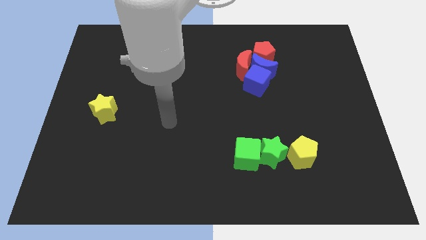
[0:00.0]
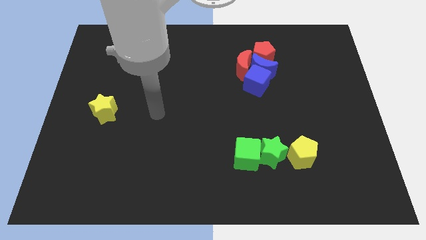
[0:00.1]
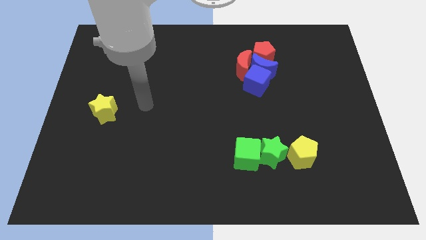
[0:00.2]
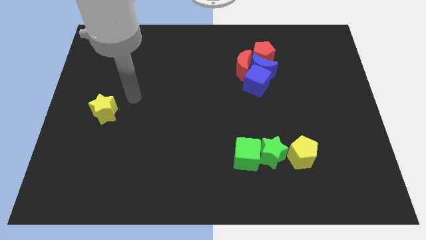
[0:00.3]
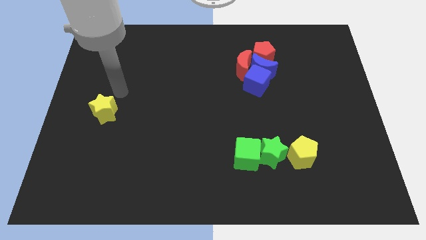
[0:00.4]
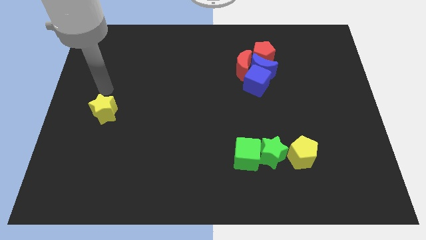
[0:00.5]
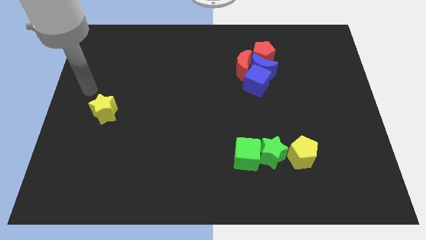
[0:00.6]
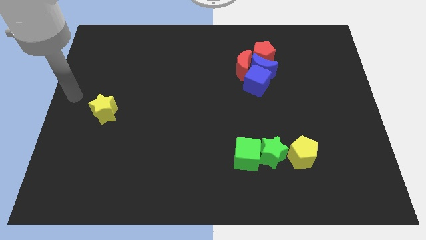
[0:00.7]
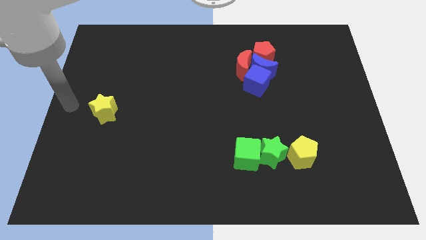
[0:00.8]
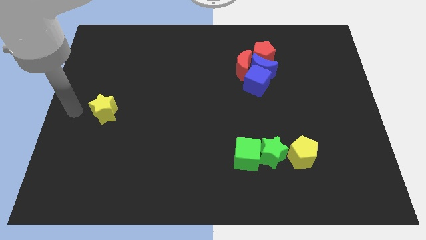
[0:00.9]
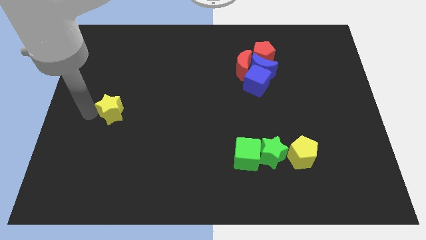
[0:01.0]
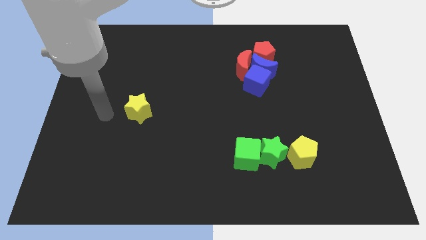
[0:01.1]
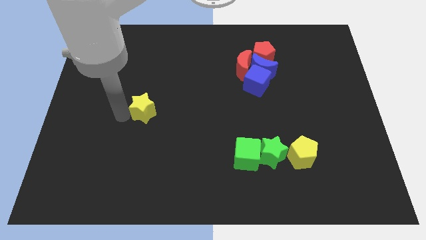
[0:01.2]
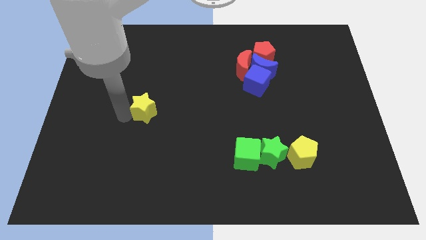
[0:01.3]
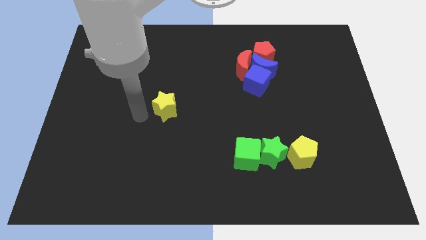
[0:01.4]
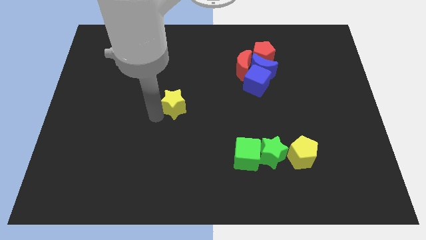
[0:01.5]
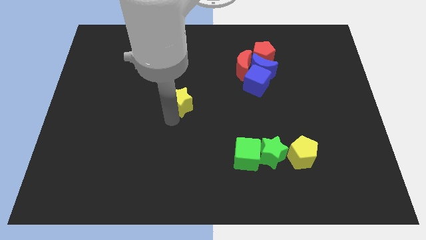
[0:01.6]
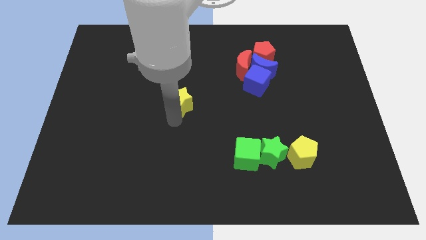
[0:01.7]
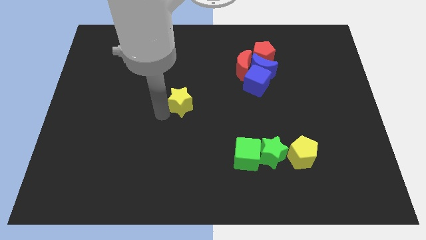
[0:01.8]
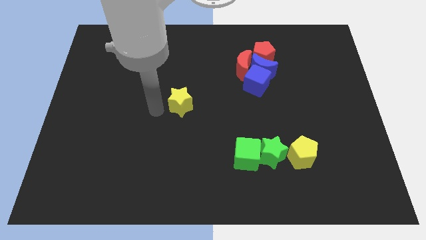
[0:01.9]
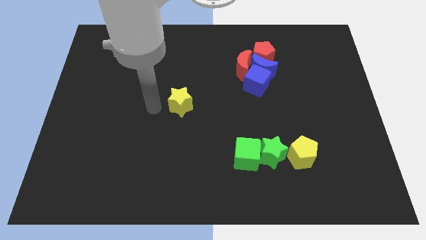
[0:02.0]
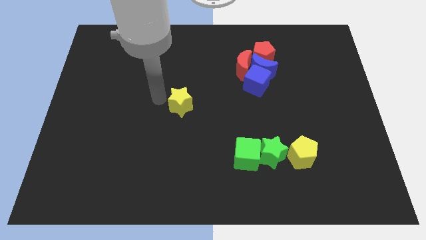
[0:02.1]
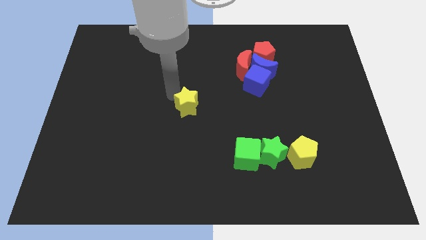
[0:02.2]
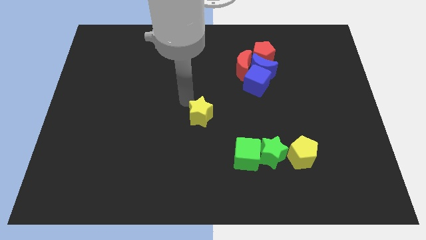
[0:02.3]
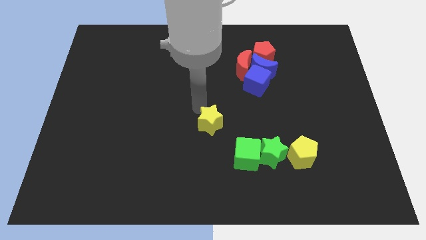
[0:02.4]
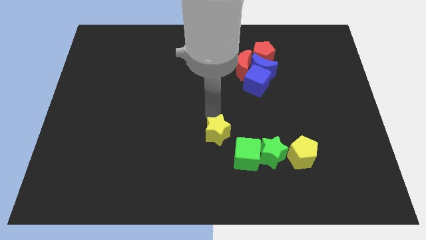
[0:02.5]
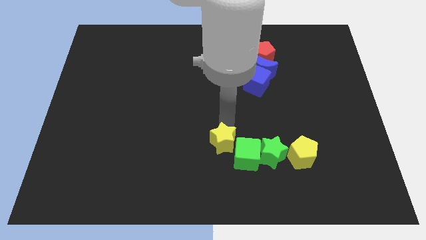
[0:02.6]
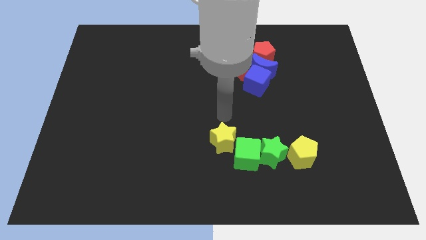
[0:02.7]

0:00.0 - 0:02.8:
push yellow star closer to the green cube

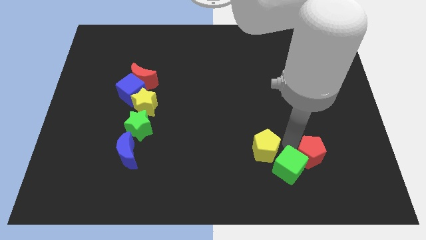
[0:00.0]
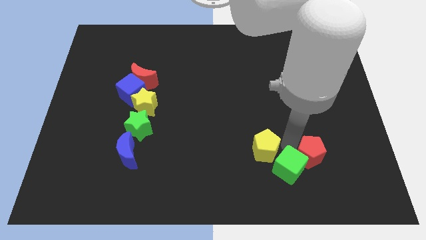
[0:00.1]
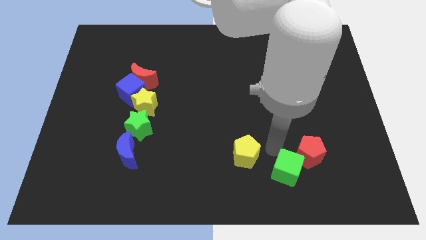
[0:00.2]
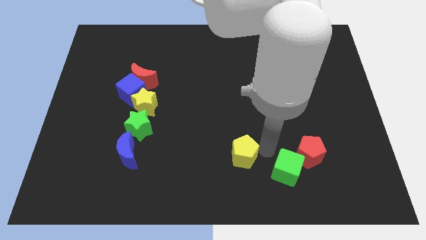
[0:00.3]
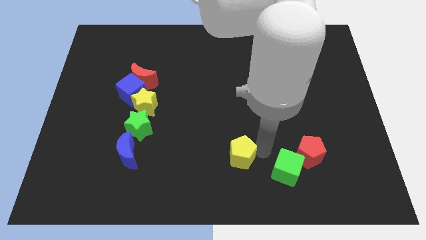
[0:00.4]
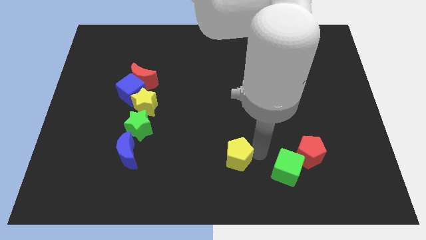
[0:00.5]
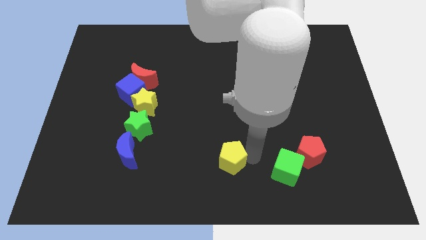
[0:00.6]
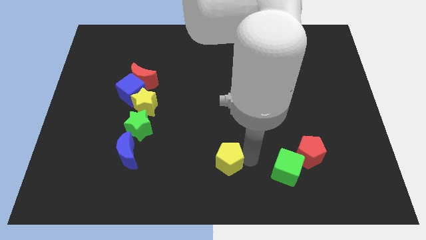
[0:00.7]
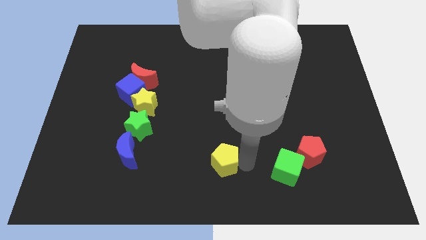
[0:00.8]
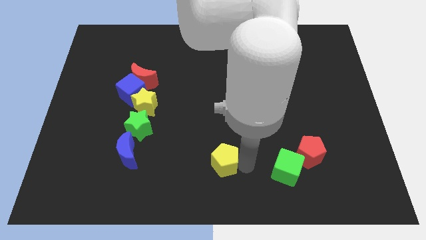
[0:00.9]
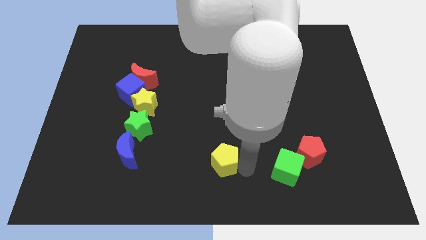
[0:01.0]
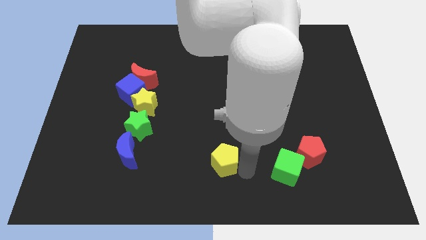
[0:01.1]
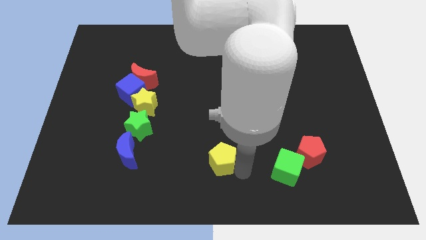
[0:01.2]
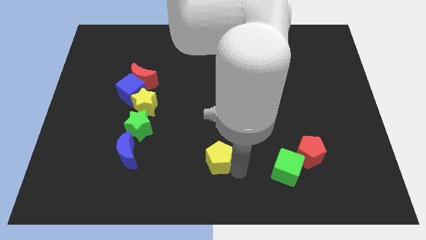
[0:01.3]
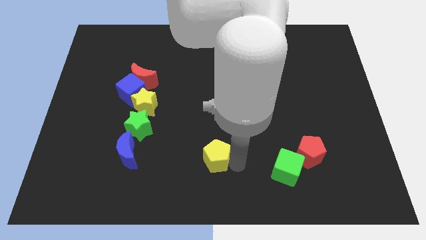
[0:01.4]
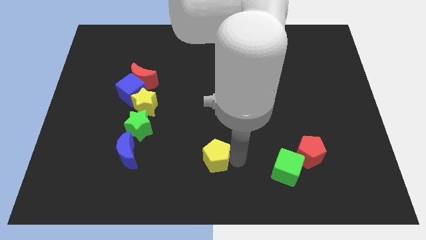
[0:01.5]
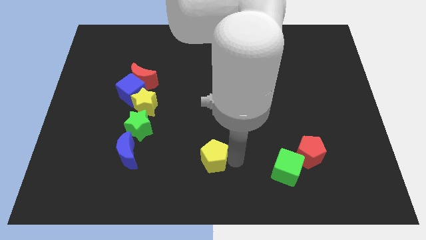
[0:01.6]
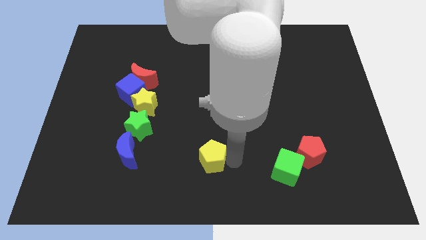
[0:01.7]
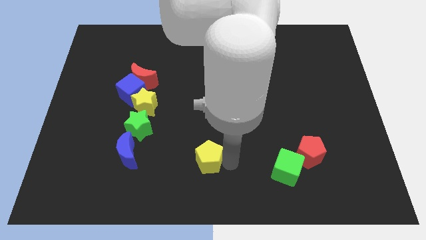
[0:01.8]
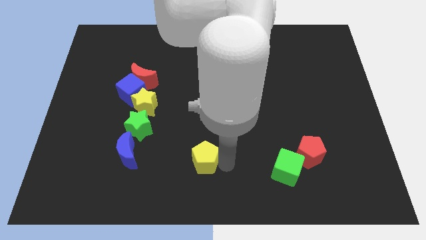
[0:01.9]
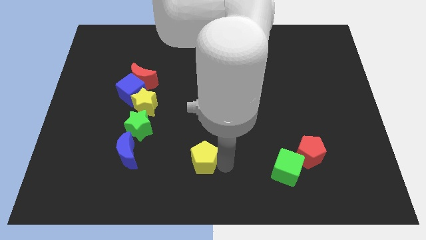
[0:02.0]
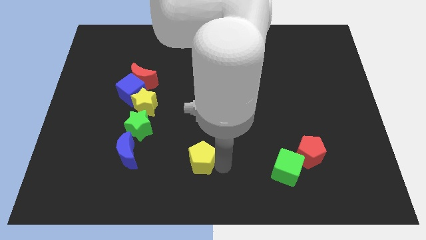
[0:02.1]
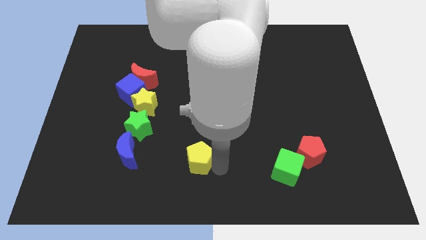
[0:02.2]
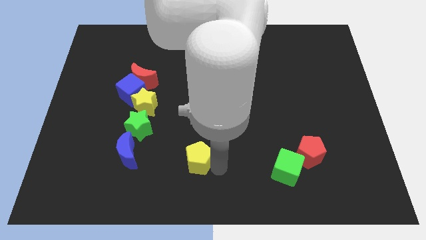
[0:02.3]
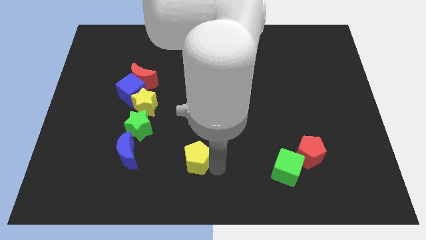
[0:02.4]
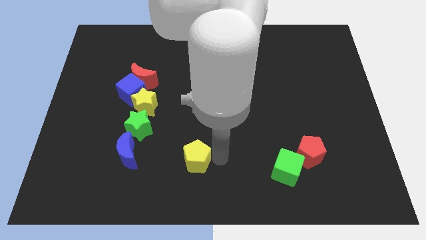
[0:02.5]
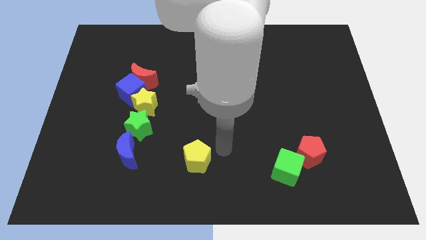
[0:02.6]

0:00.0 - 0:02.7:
push the yellow pentagon slightly to the left of the board

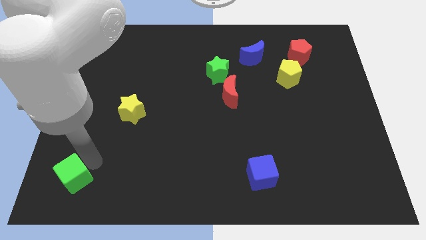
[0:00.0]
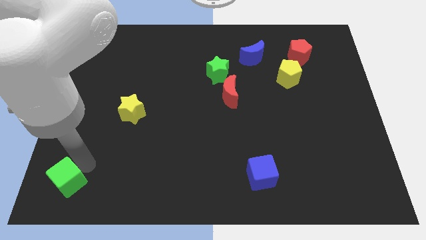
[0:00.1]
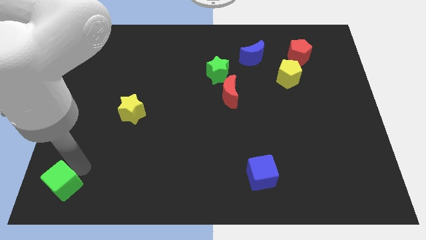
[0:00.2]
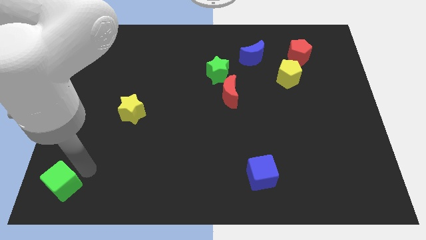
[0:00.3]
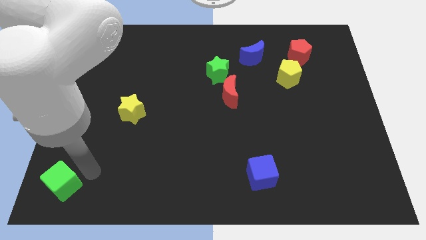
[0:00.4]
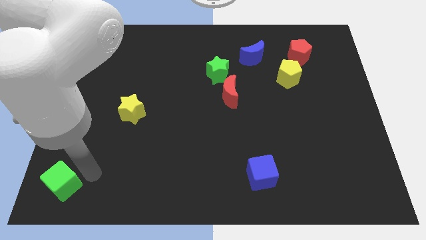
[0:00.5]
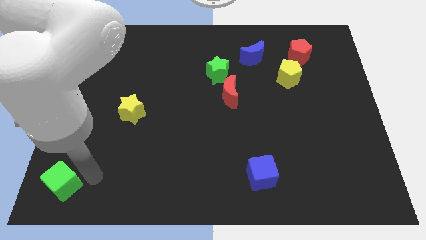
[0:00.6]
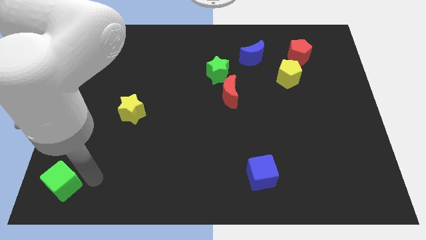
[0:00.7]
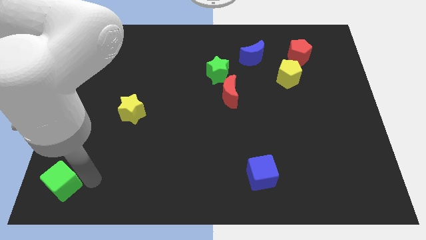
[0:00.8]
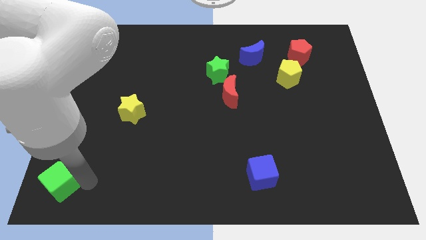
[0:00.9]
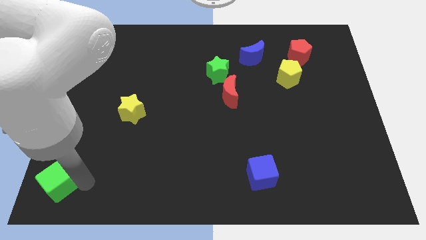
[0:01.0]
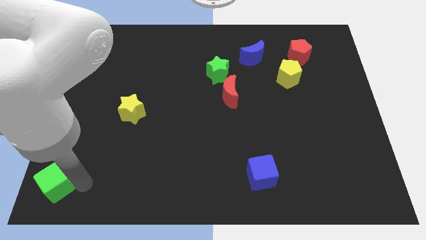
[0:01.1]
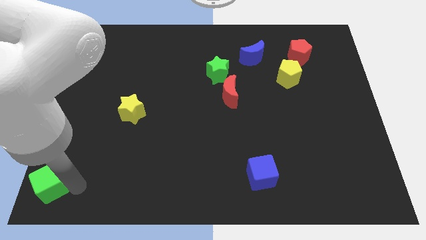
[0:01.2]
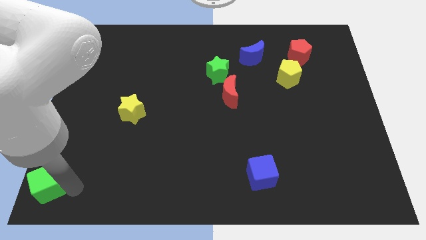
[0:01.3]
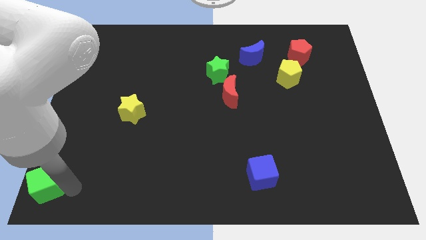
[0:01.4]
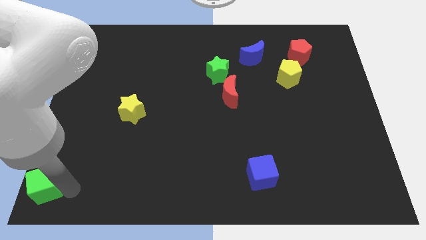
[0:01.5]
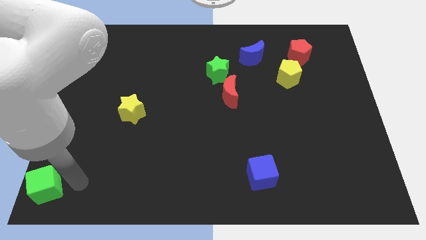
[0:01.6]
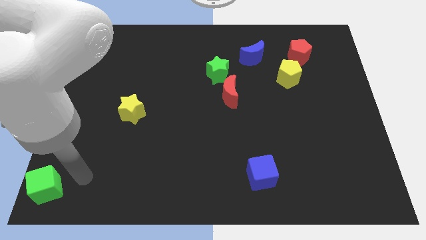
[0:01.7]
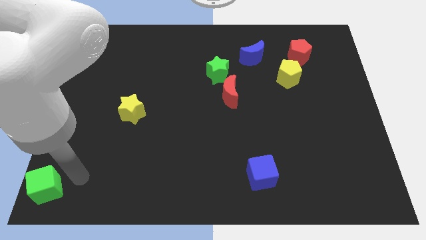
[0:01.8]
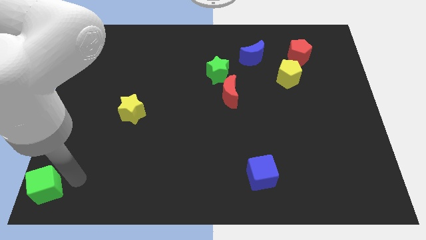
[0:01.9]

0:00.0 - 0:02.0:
push the green cube to the bottom left corner of the board

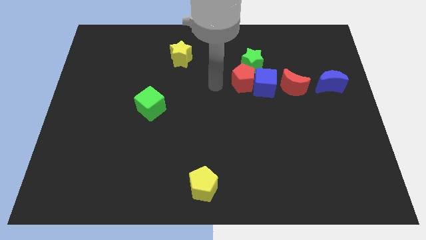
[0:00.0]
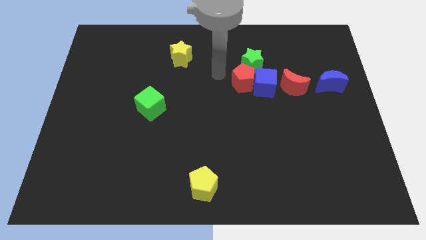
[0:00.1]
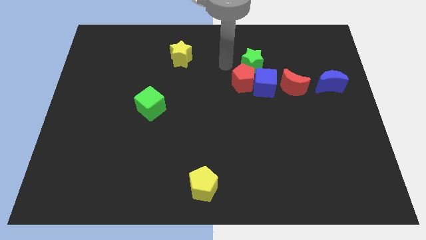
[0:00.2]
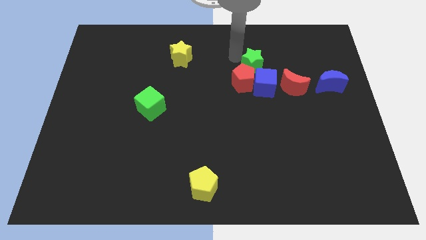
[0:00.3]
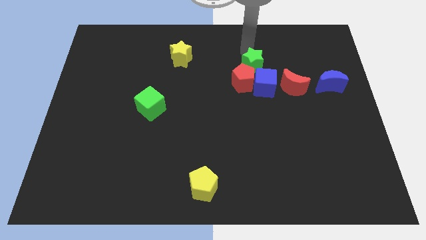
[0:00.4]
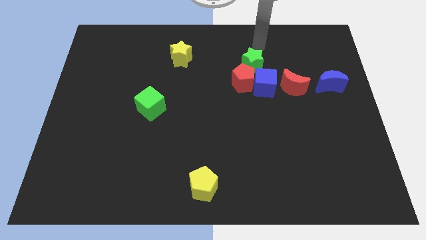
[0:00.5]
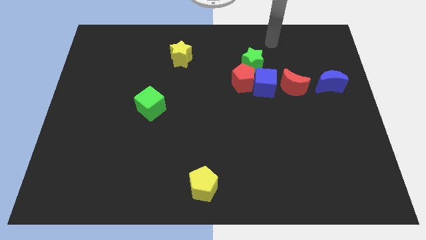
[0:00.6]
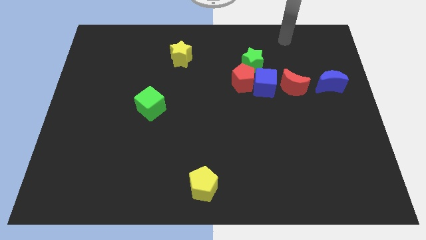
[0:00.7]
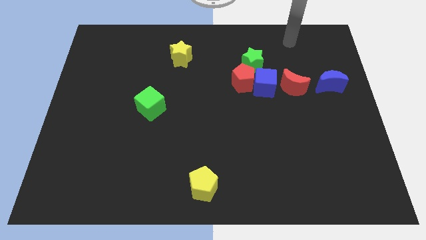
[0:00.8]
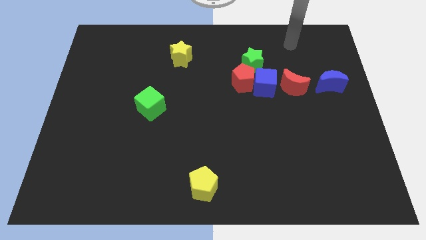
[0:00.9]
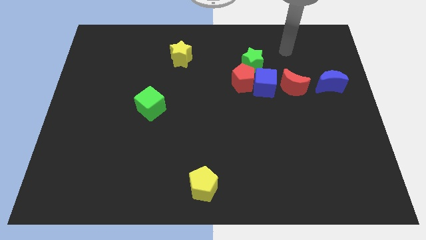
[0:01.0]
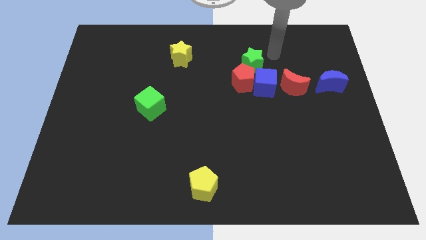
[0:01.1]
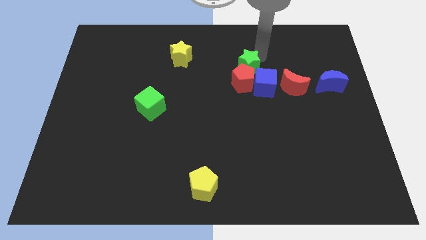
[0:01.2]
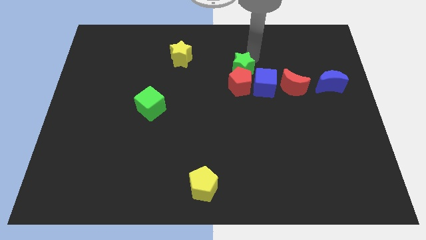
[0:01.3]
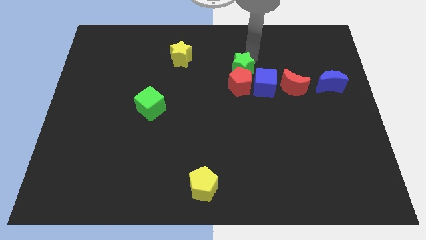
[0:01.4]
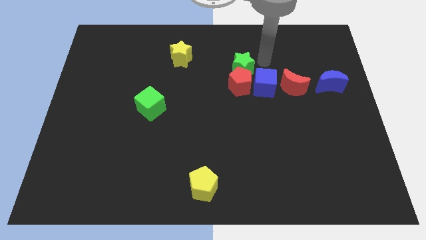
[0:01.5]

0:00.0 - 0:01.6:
push the green star into red pentagon
